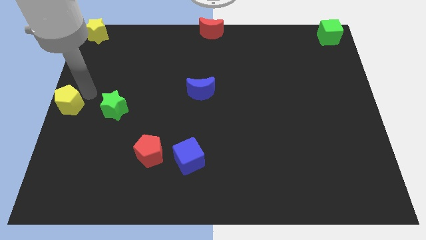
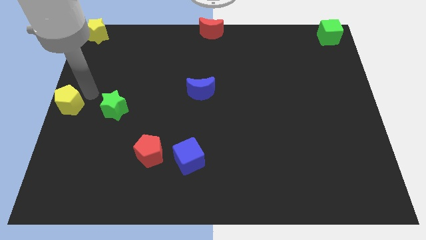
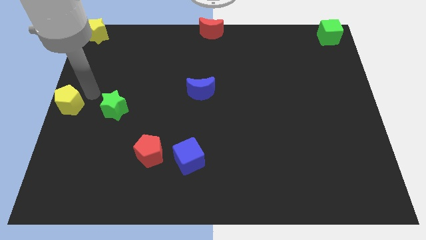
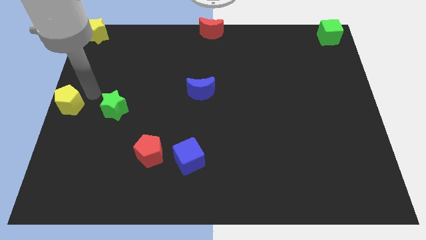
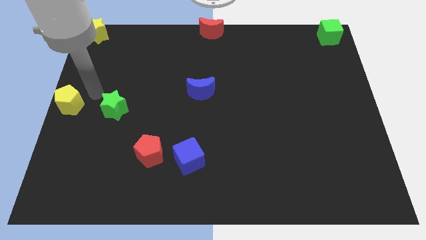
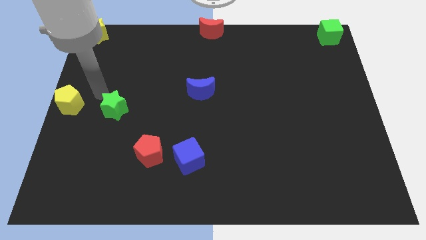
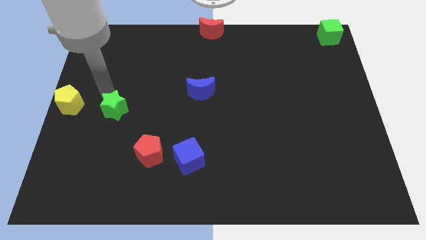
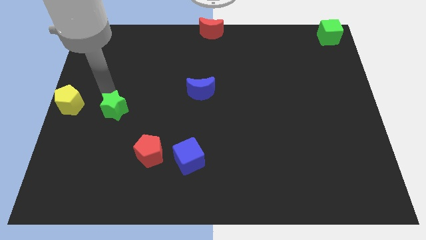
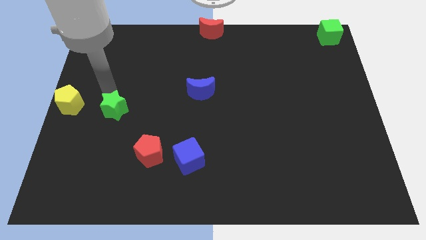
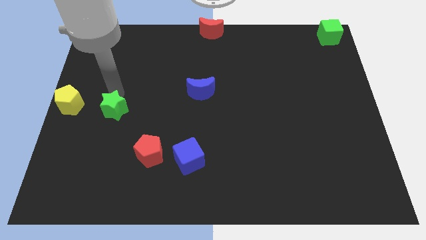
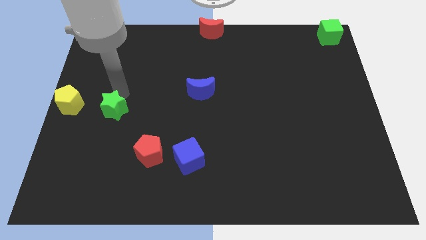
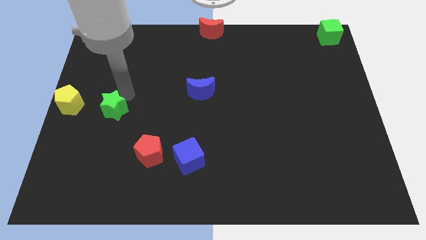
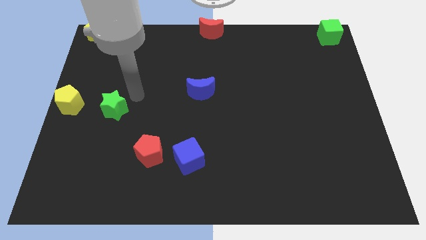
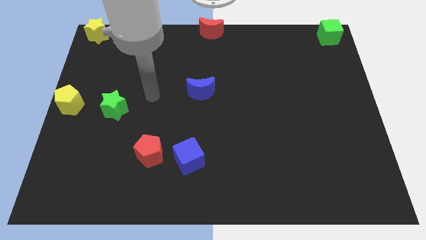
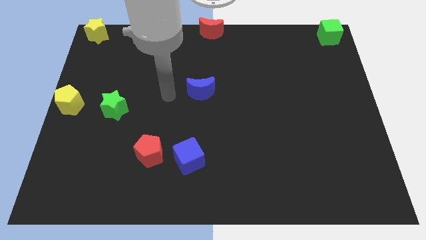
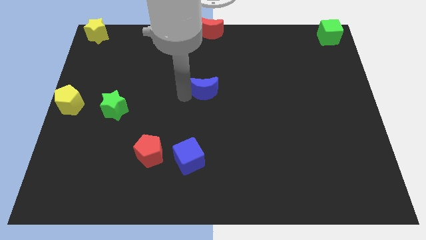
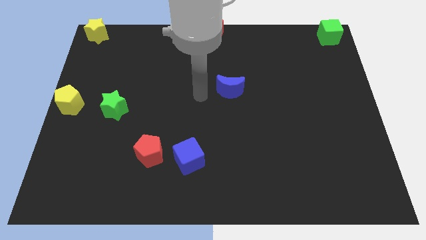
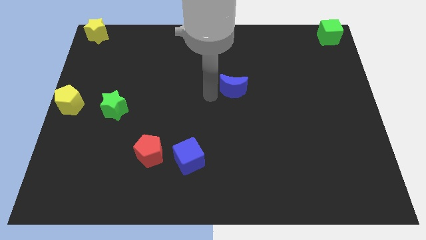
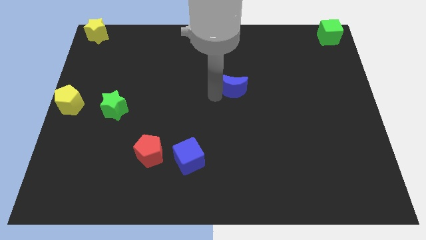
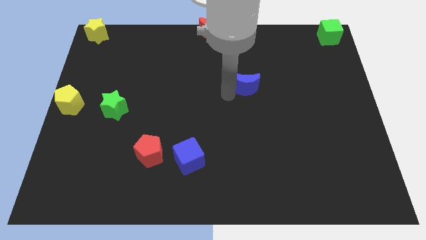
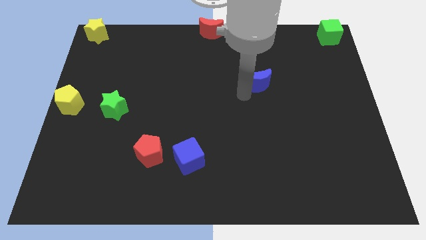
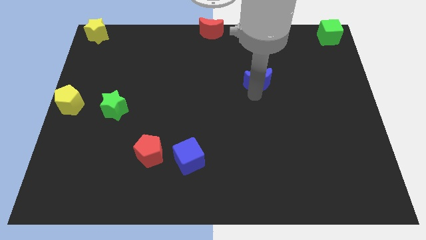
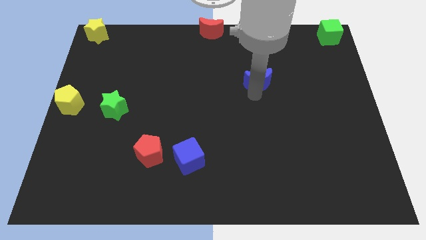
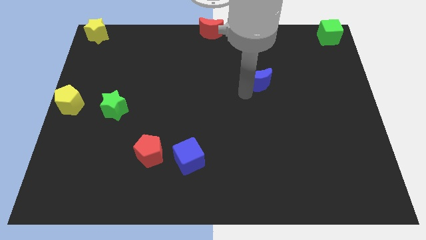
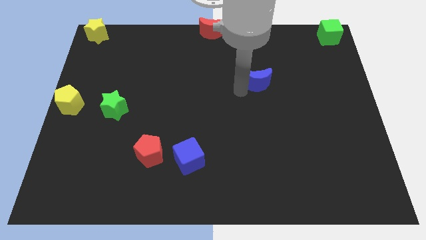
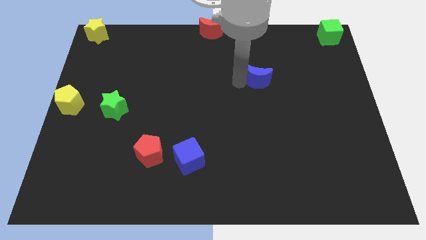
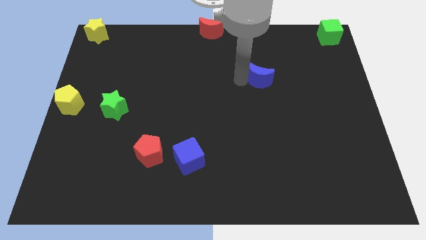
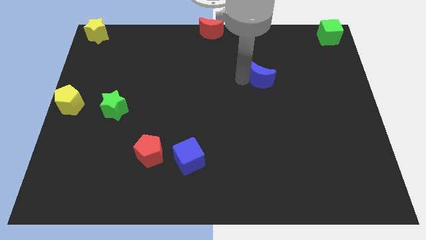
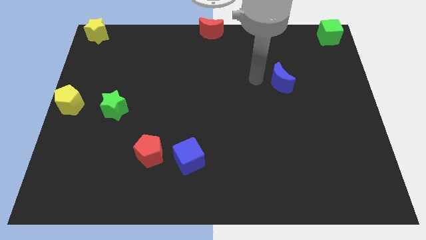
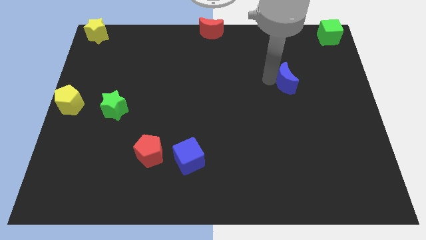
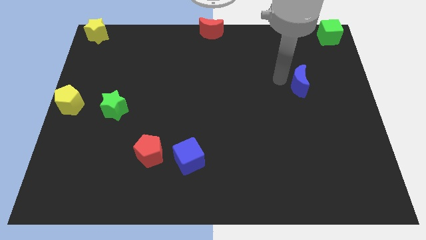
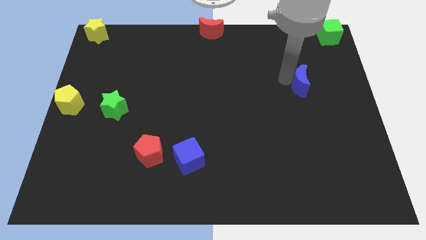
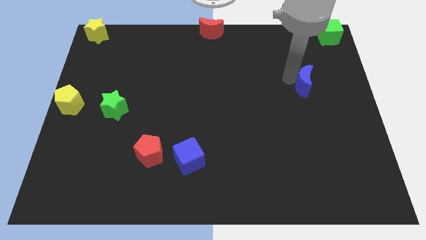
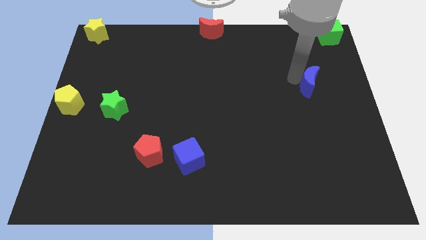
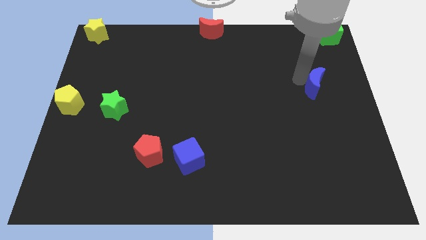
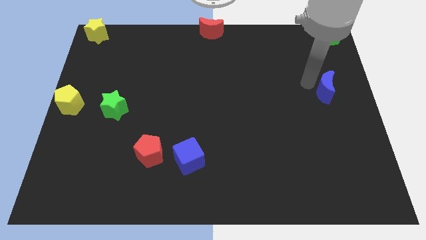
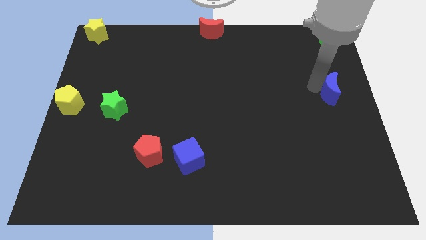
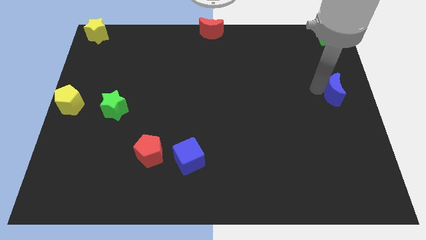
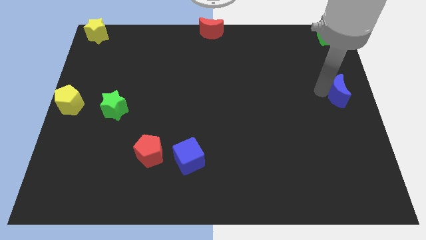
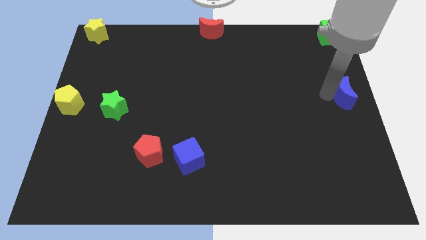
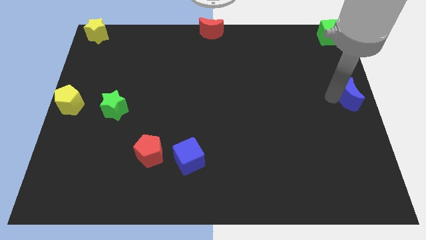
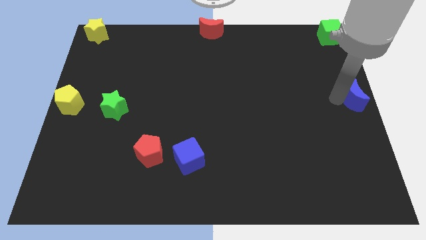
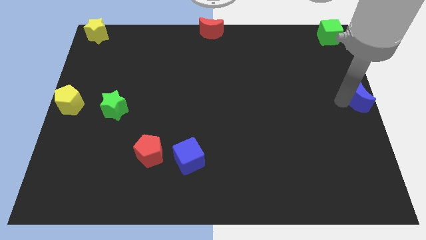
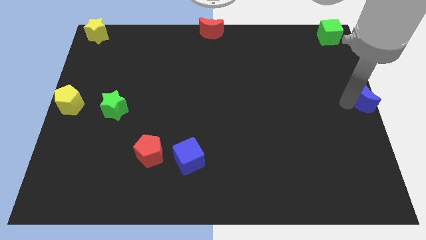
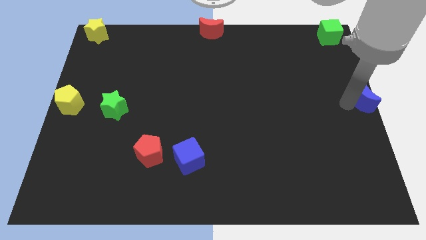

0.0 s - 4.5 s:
place the blue crescent at the center right of the board

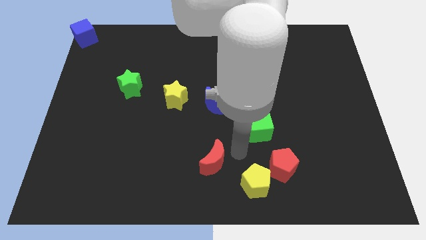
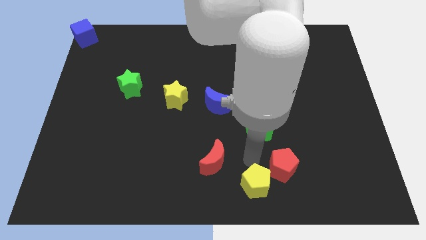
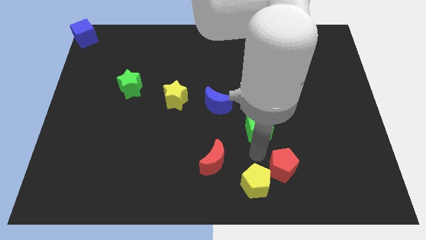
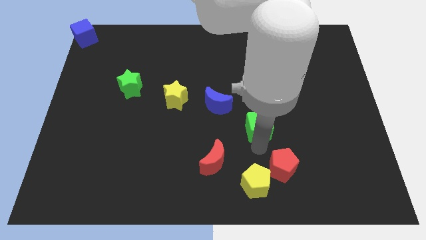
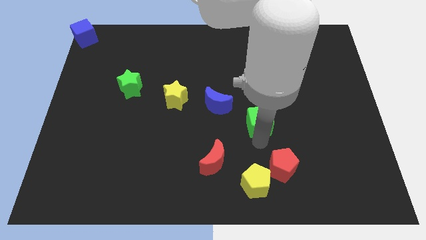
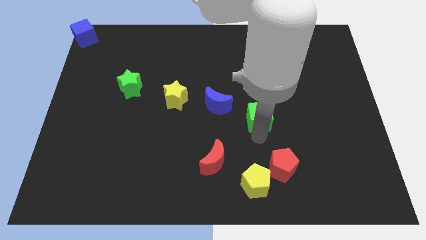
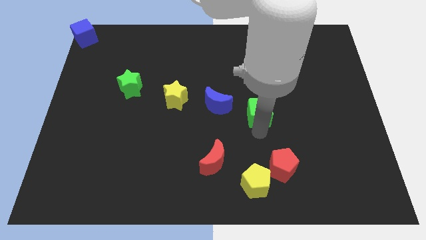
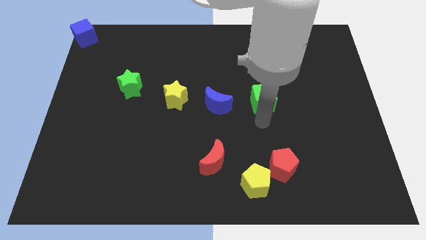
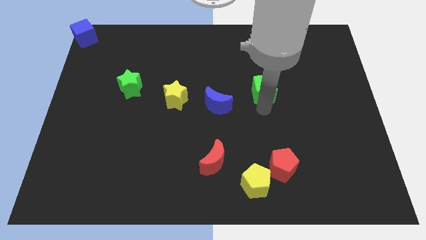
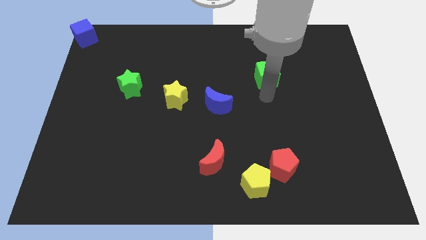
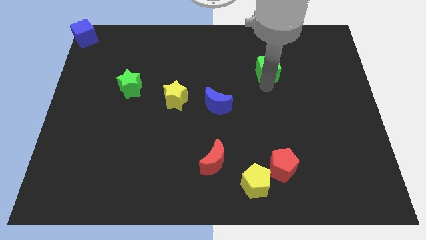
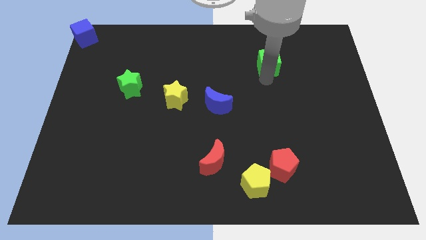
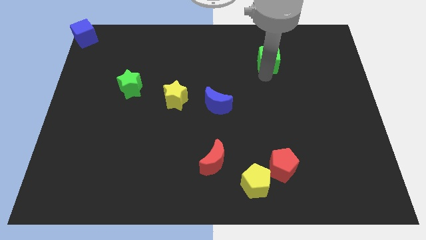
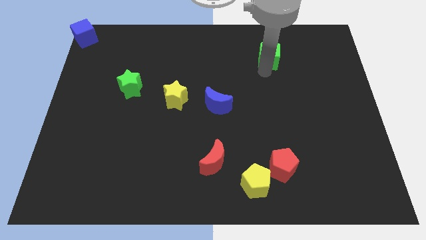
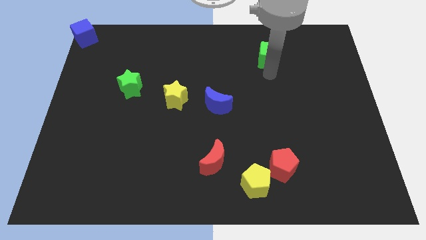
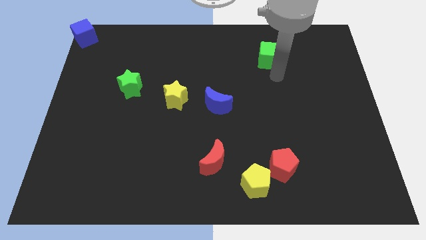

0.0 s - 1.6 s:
take the green cube towards the top right side of the board

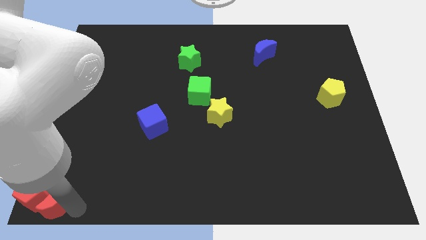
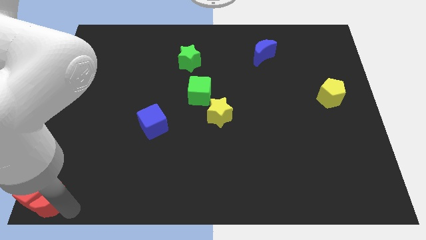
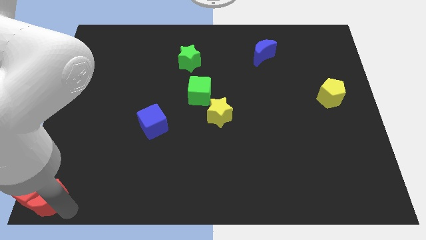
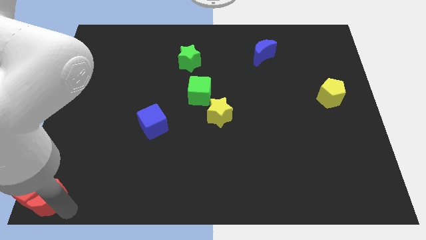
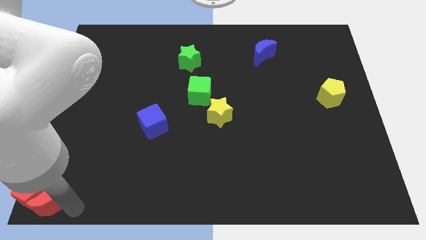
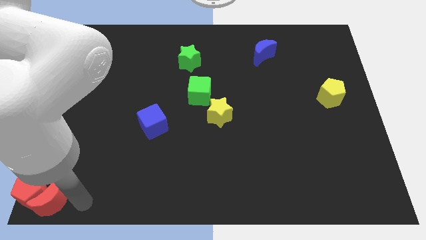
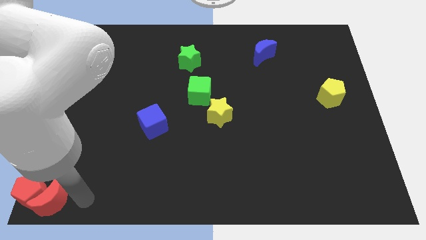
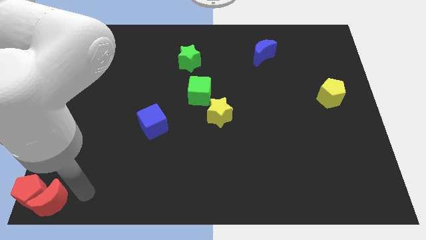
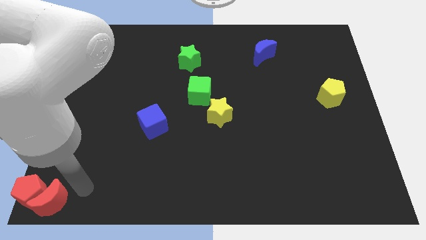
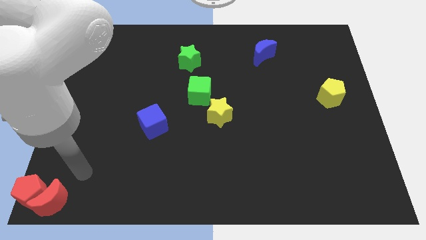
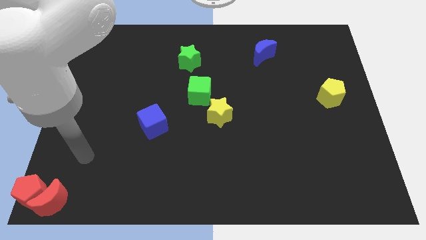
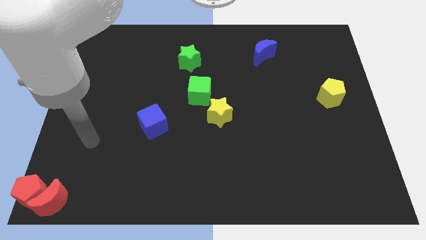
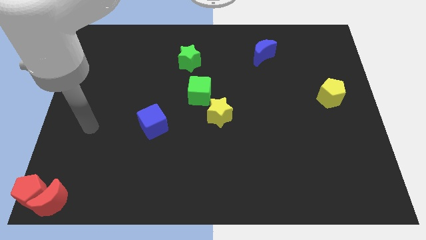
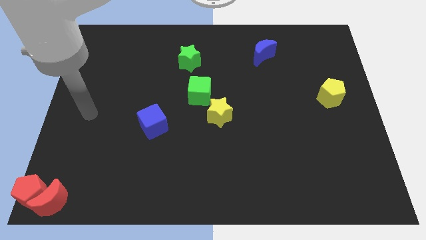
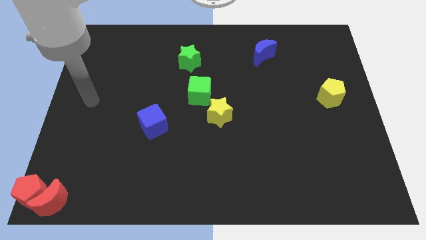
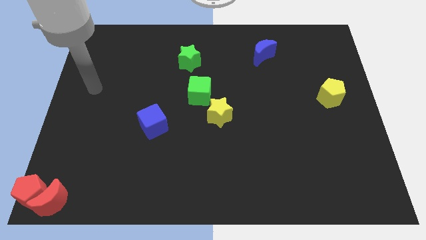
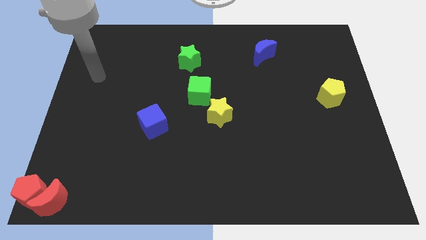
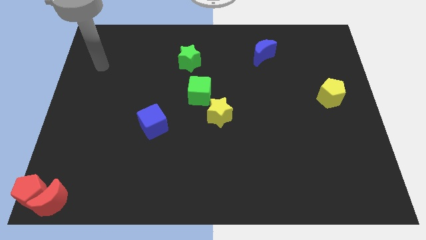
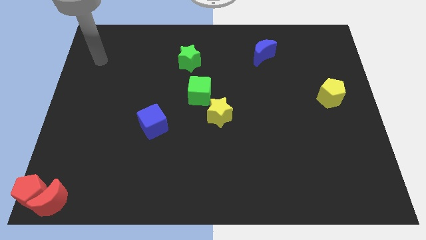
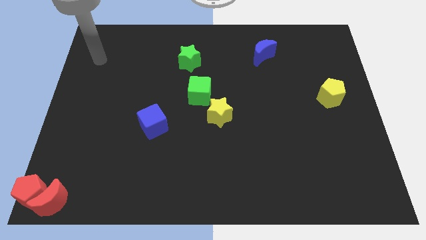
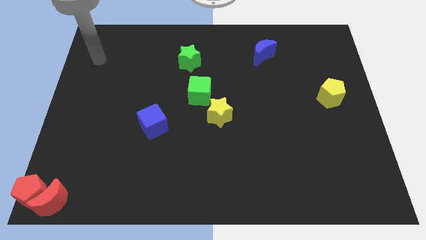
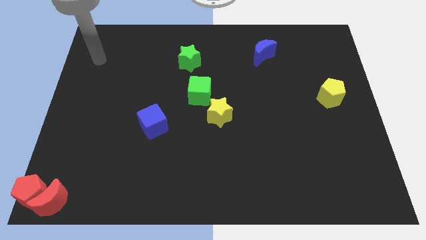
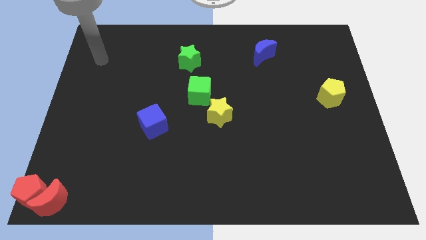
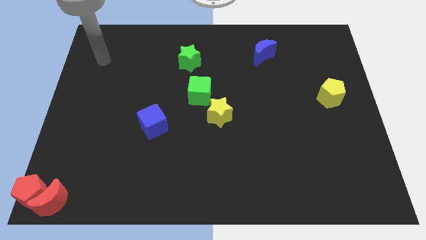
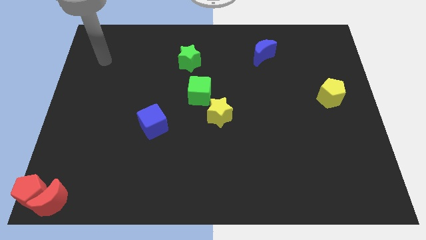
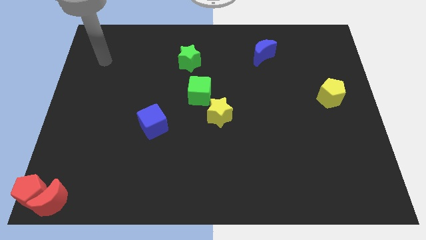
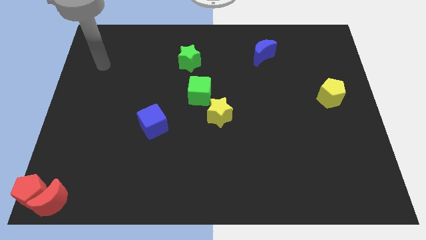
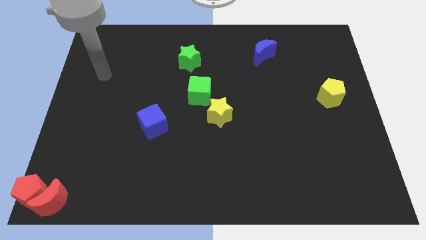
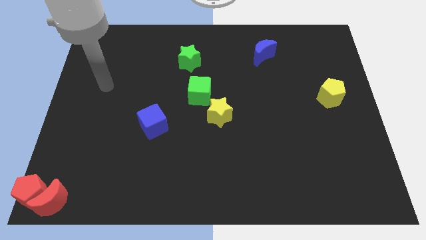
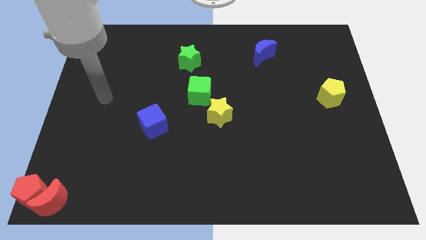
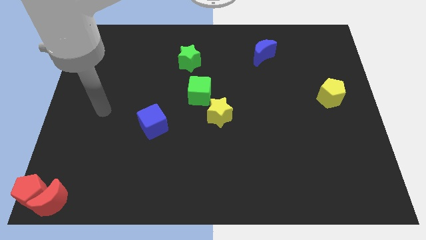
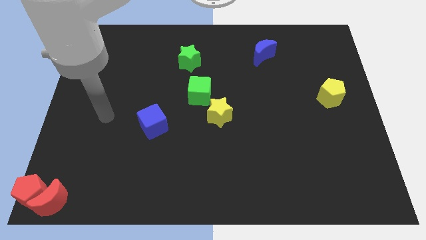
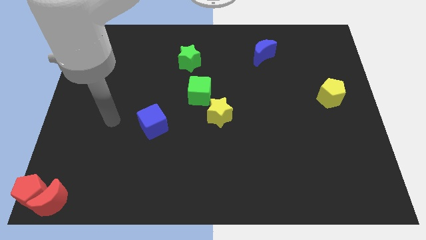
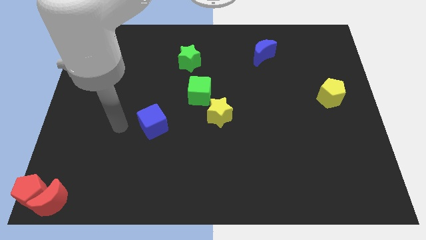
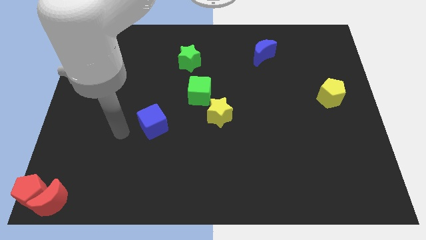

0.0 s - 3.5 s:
move the arm towards the left side of the blue cube
